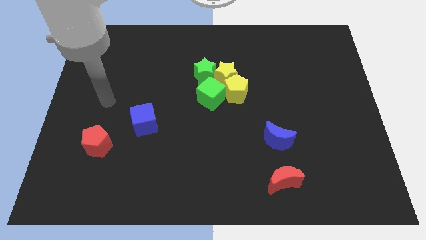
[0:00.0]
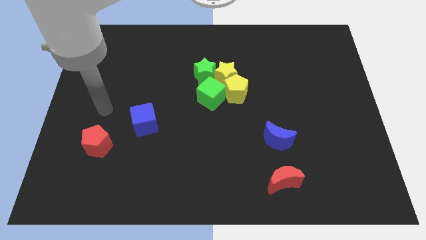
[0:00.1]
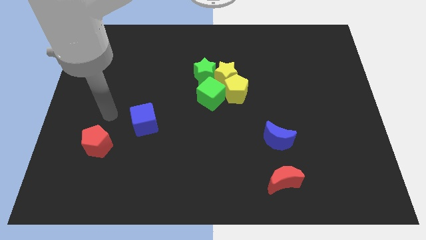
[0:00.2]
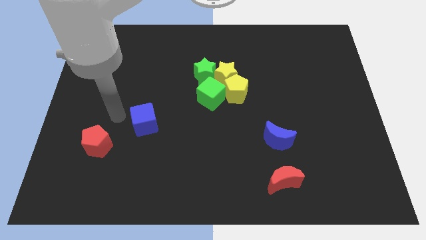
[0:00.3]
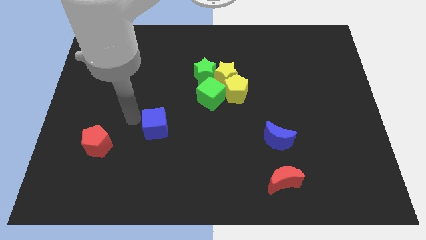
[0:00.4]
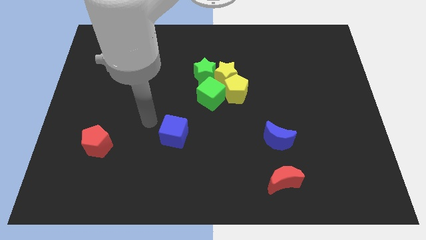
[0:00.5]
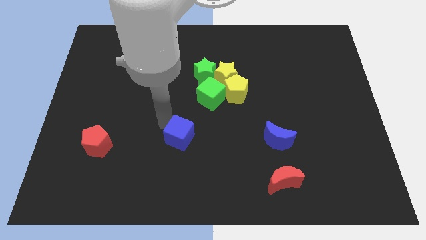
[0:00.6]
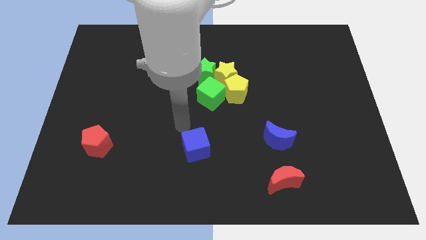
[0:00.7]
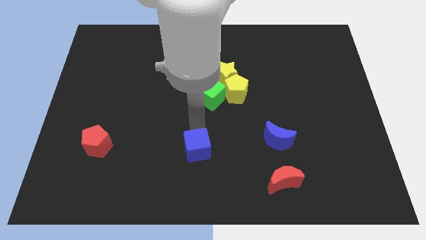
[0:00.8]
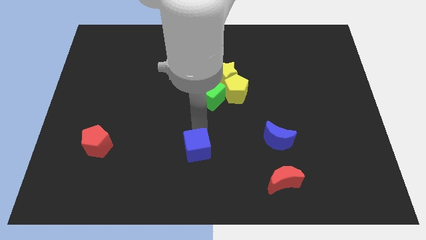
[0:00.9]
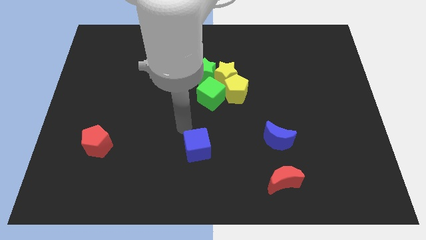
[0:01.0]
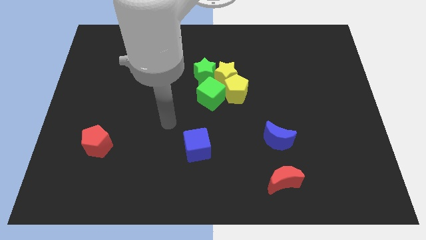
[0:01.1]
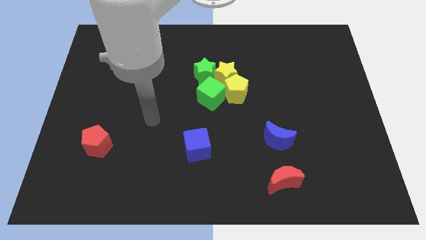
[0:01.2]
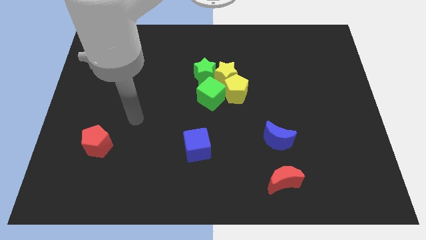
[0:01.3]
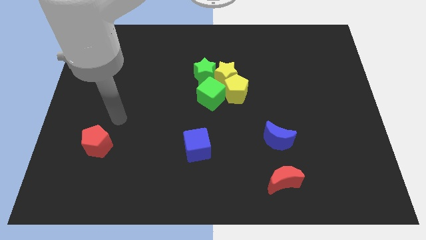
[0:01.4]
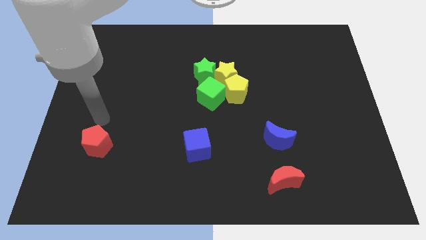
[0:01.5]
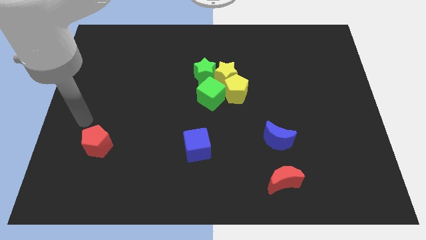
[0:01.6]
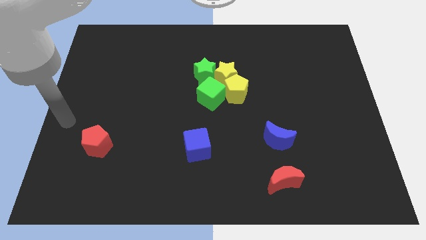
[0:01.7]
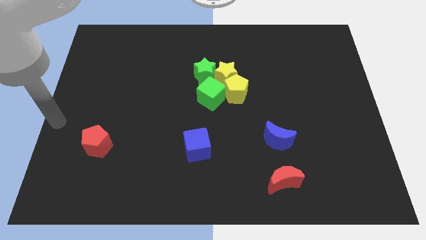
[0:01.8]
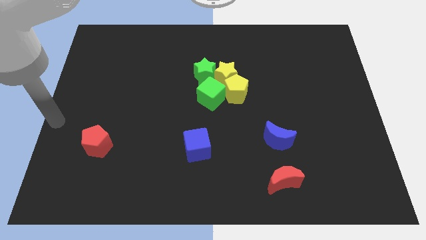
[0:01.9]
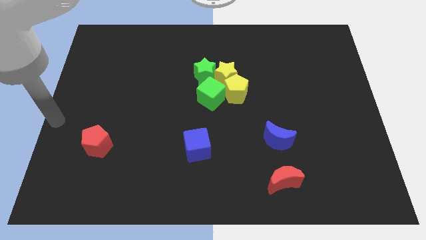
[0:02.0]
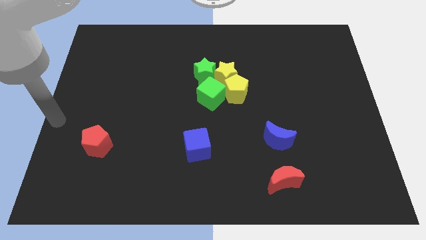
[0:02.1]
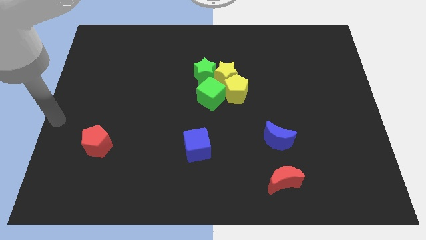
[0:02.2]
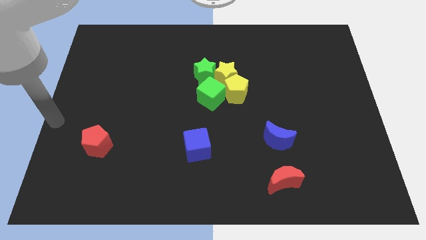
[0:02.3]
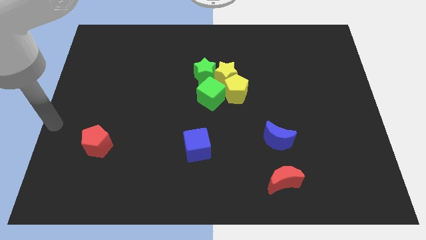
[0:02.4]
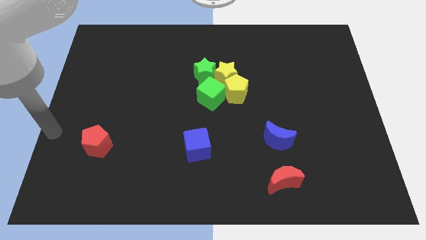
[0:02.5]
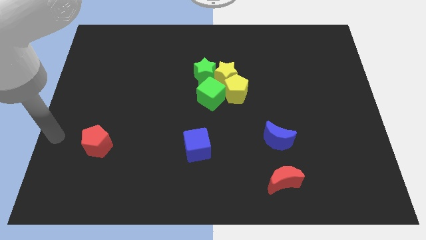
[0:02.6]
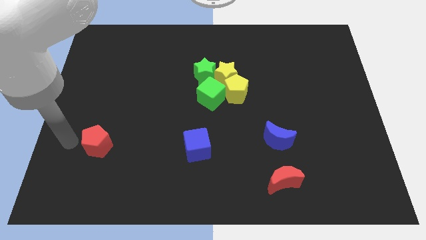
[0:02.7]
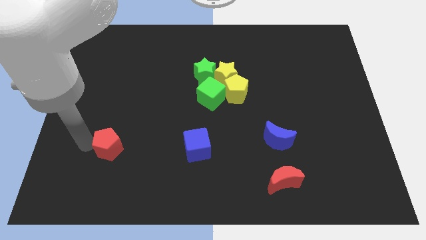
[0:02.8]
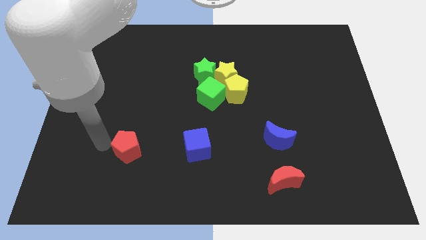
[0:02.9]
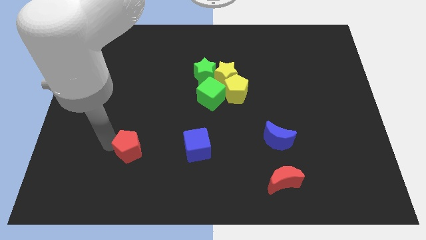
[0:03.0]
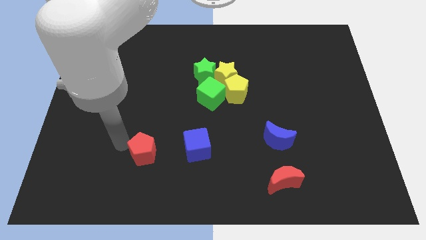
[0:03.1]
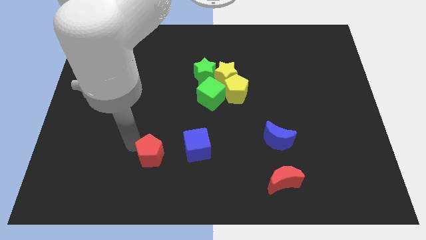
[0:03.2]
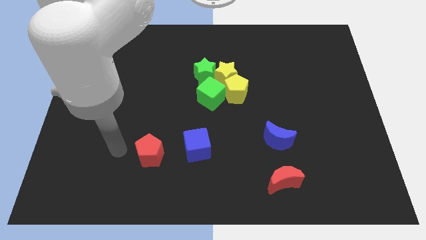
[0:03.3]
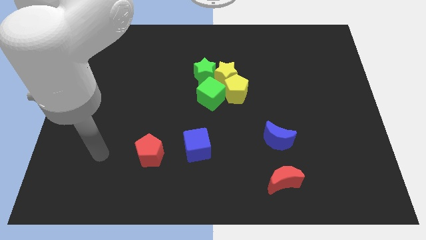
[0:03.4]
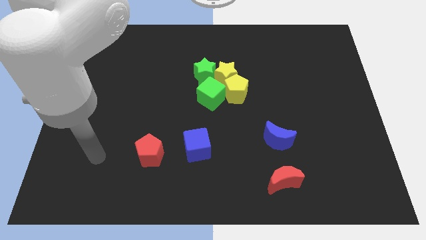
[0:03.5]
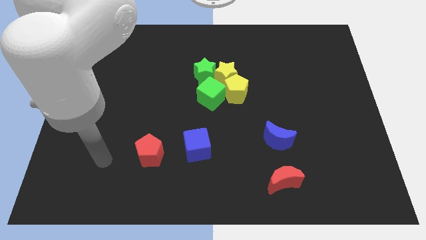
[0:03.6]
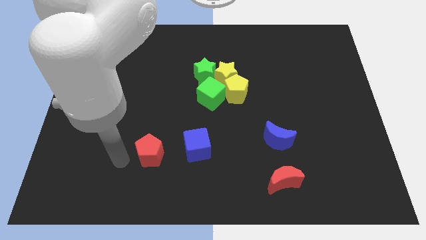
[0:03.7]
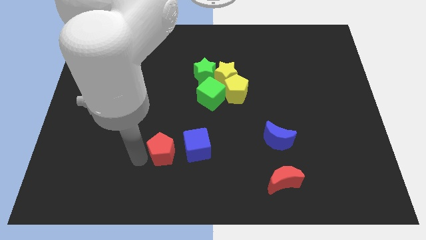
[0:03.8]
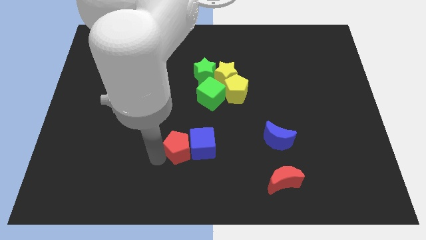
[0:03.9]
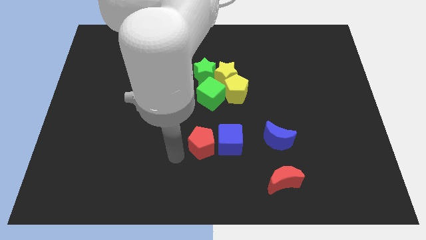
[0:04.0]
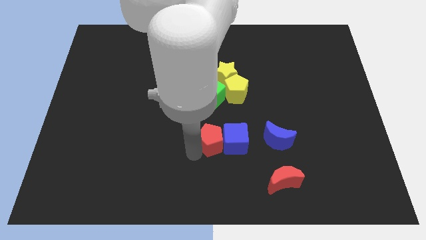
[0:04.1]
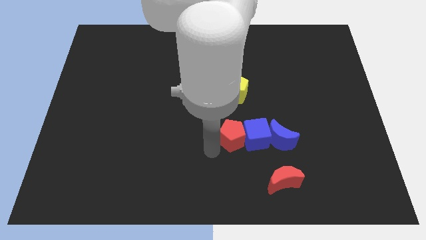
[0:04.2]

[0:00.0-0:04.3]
push the red pentagon and blue cube into the left of the blue crescent

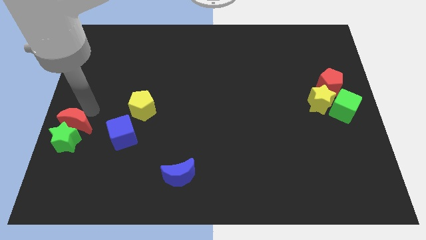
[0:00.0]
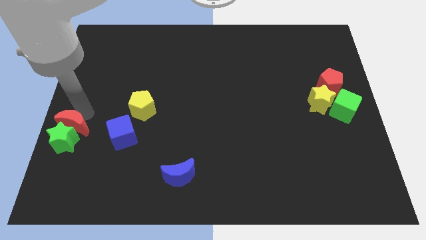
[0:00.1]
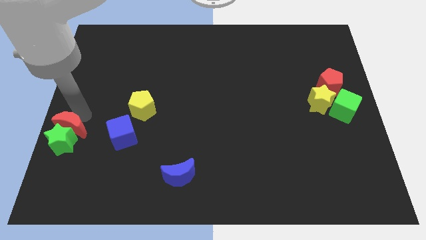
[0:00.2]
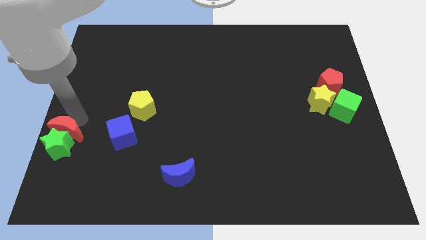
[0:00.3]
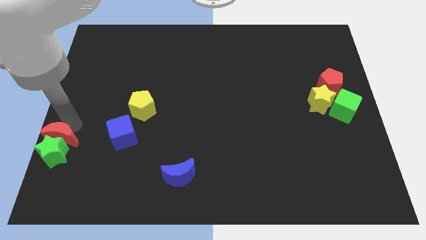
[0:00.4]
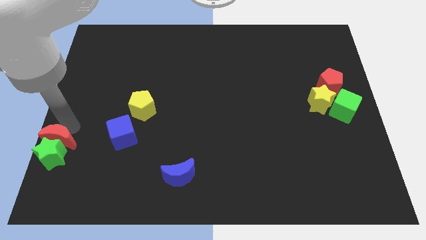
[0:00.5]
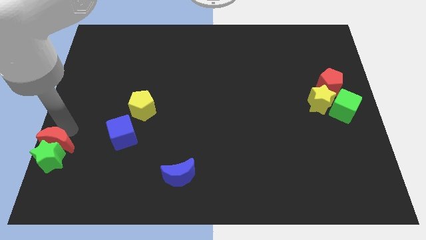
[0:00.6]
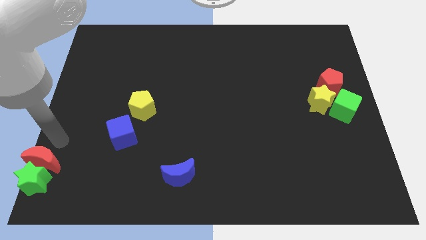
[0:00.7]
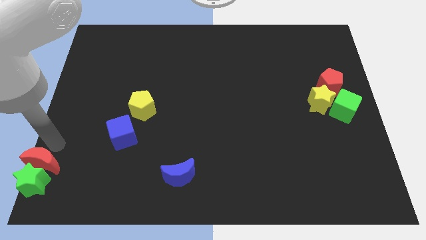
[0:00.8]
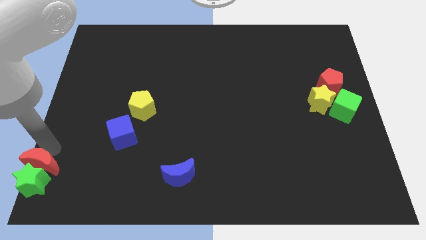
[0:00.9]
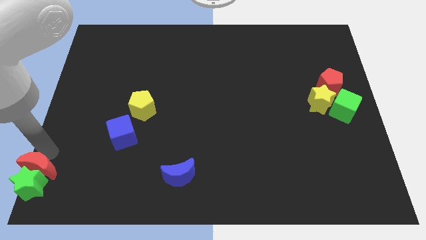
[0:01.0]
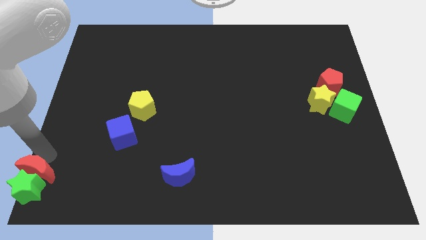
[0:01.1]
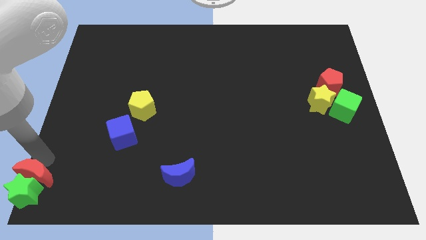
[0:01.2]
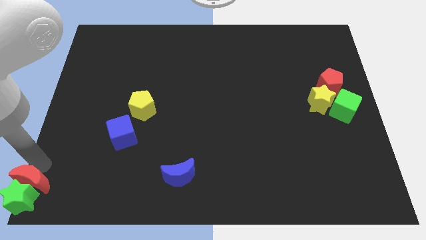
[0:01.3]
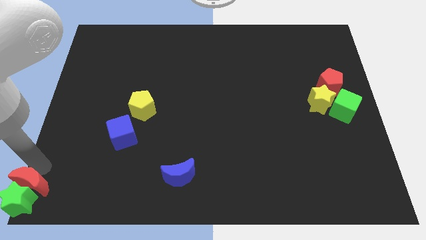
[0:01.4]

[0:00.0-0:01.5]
place red crescent towards bottom left corner

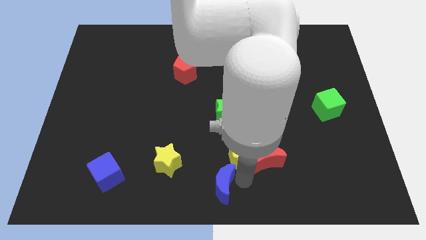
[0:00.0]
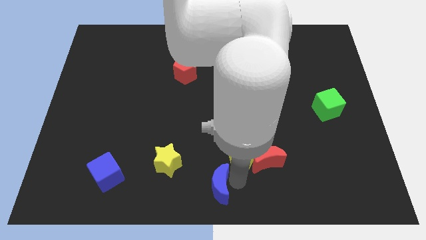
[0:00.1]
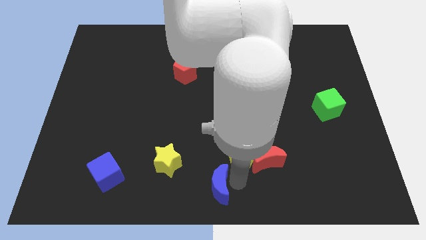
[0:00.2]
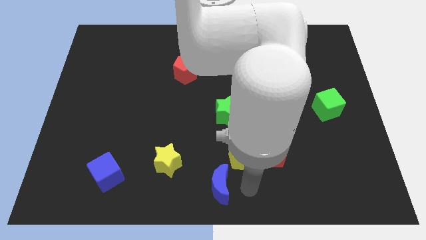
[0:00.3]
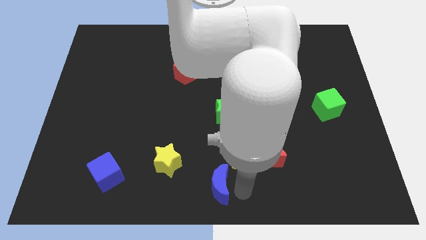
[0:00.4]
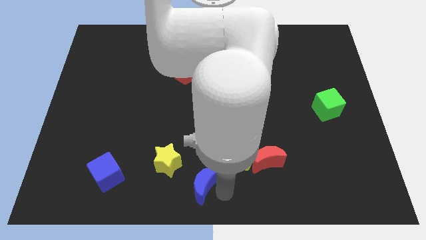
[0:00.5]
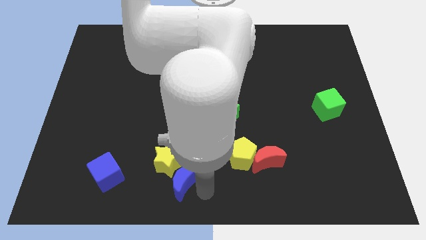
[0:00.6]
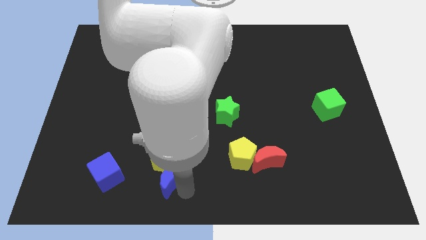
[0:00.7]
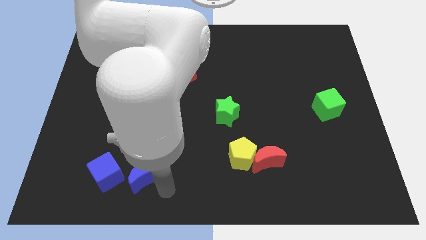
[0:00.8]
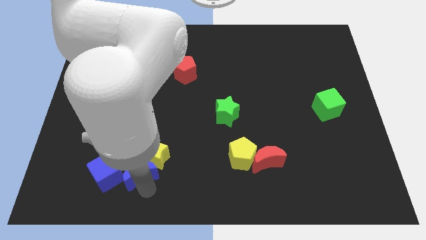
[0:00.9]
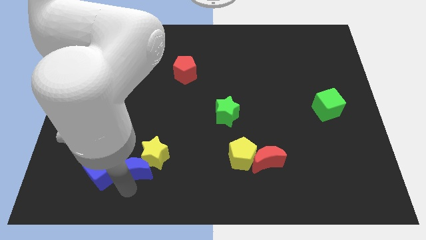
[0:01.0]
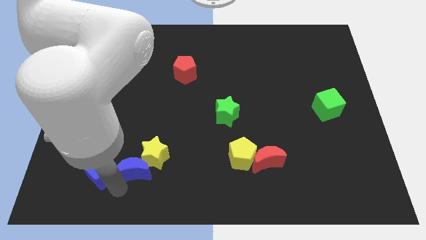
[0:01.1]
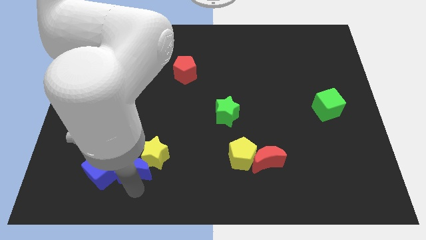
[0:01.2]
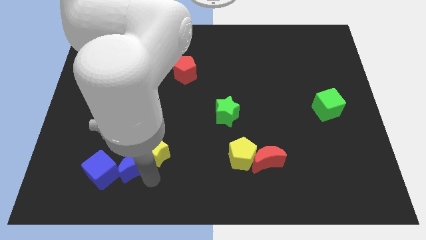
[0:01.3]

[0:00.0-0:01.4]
move the blue crescent in between the yellow star and blue cube

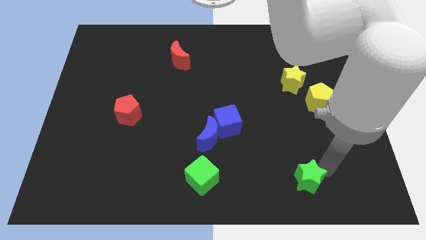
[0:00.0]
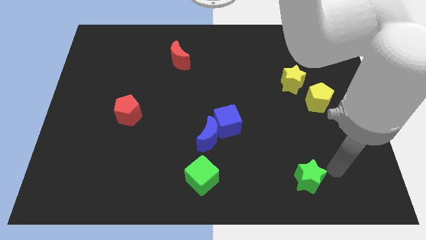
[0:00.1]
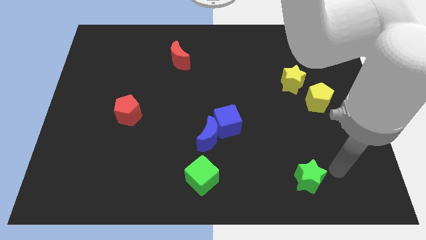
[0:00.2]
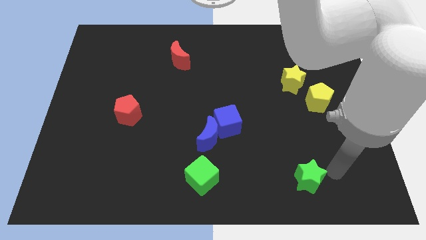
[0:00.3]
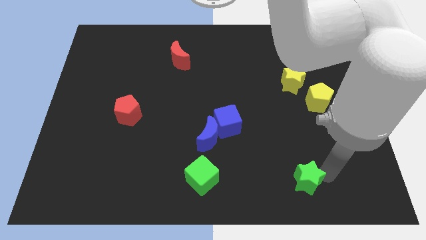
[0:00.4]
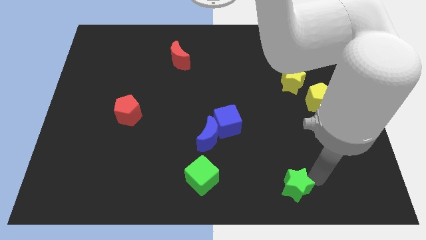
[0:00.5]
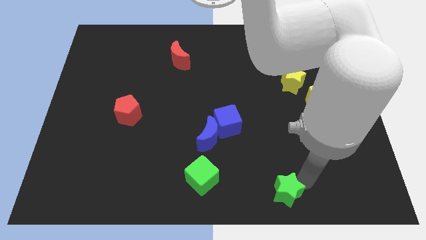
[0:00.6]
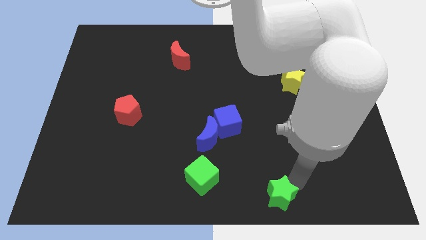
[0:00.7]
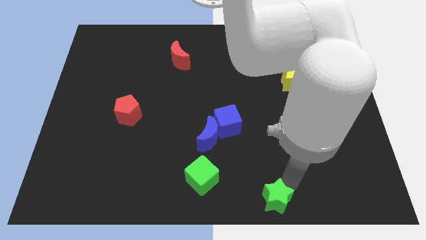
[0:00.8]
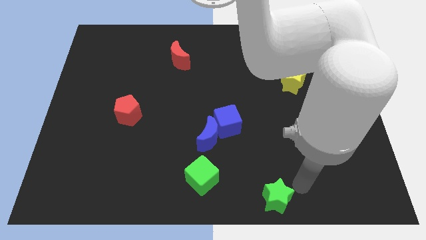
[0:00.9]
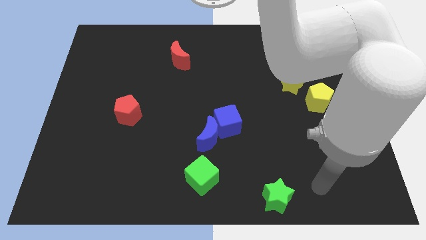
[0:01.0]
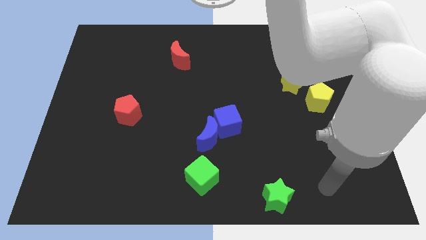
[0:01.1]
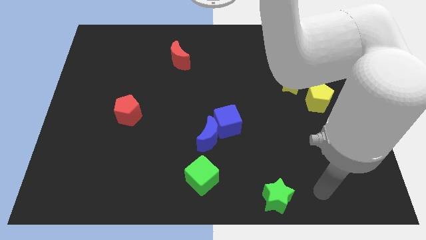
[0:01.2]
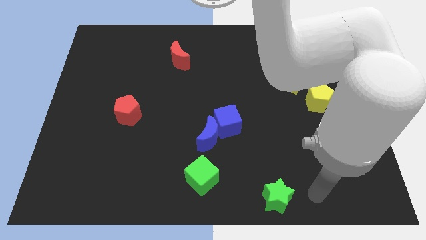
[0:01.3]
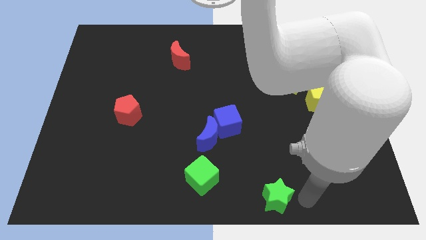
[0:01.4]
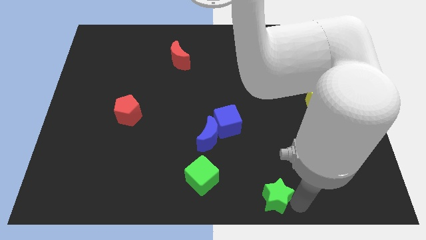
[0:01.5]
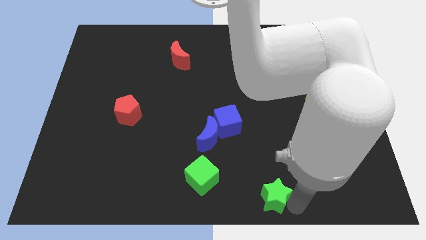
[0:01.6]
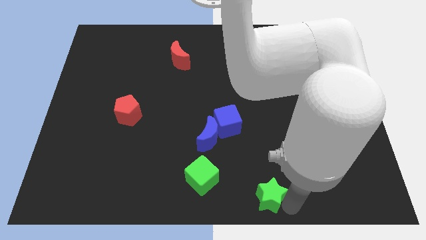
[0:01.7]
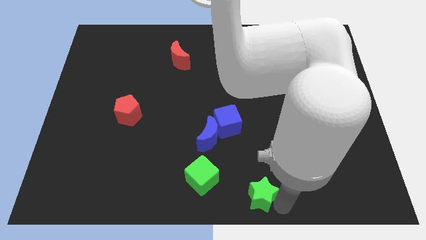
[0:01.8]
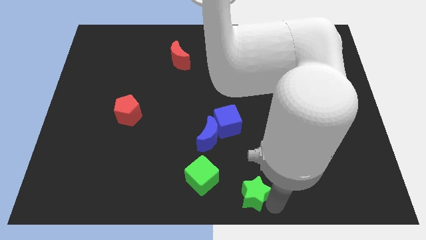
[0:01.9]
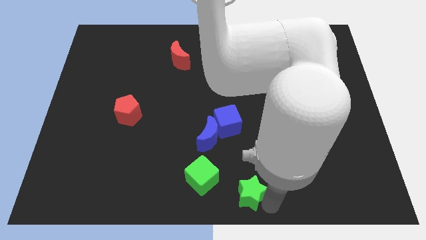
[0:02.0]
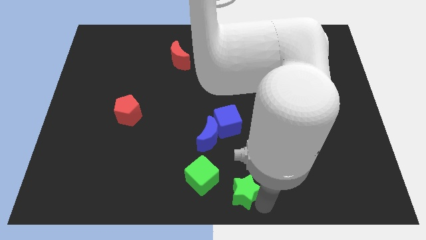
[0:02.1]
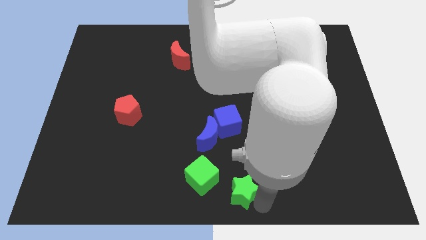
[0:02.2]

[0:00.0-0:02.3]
move green star close to green cube
